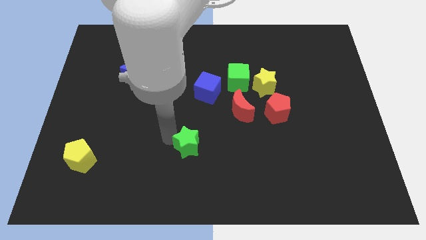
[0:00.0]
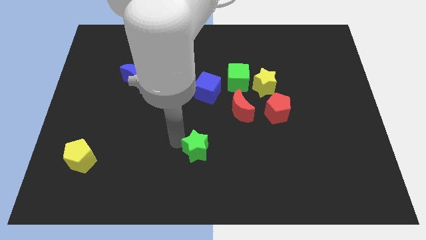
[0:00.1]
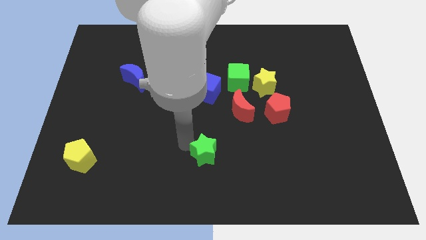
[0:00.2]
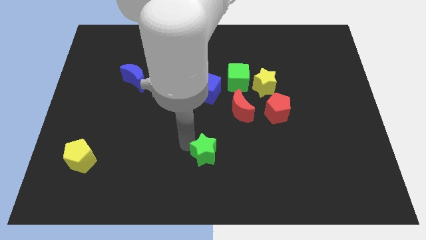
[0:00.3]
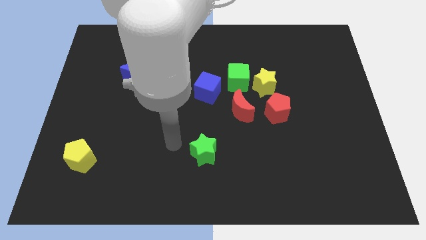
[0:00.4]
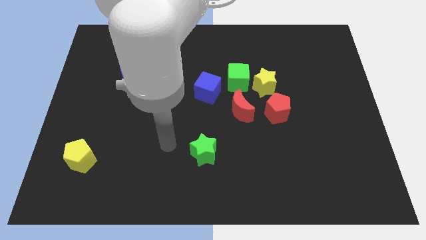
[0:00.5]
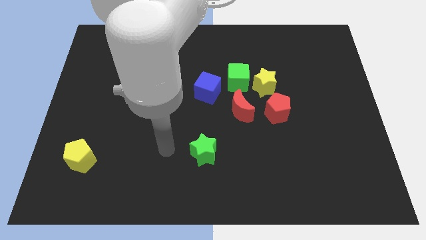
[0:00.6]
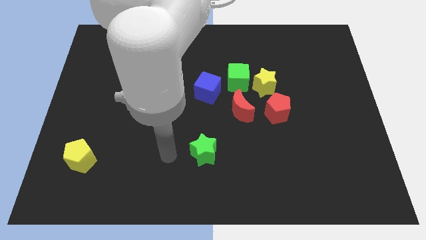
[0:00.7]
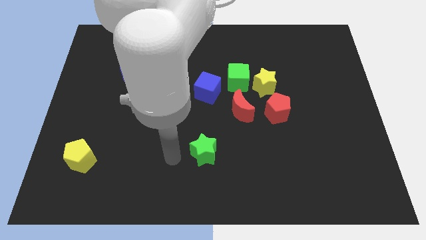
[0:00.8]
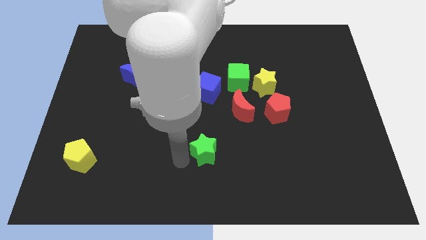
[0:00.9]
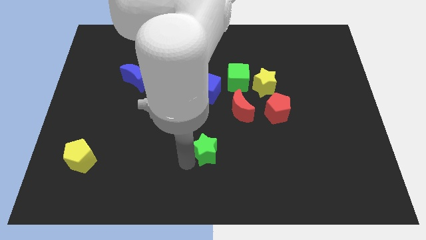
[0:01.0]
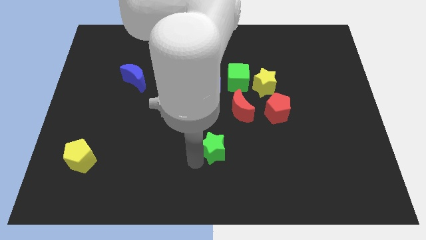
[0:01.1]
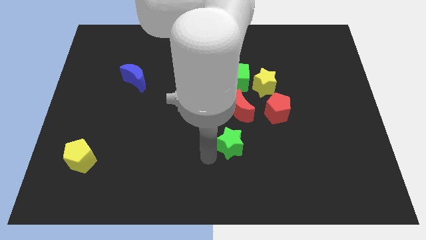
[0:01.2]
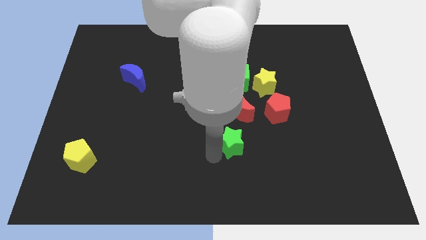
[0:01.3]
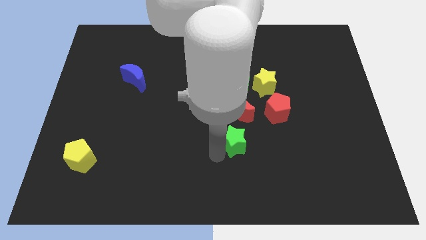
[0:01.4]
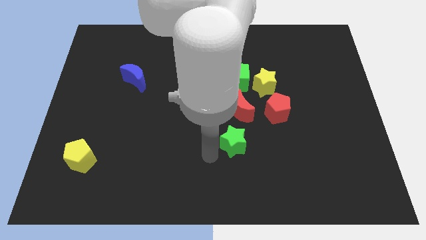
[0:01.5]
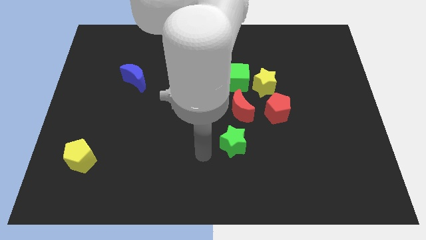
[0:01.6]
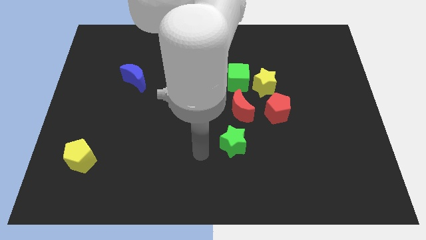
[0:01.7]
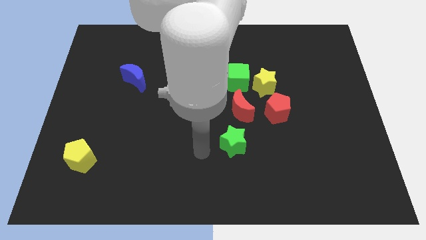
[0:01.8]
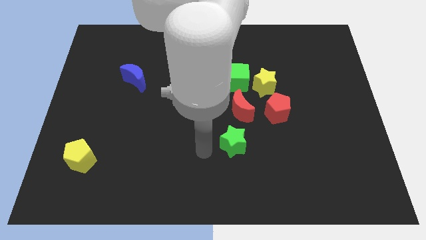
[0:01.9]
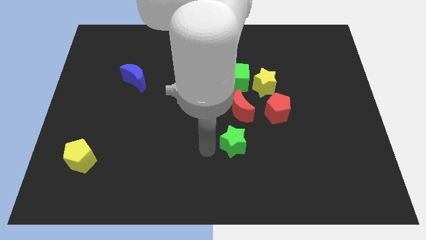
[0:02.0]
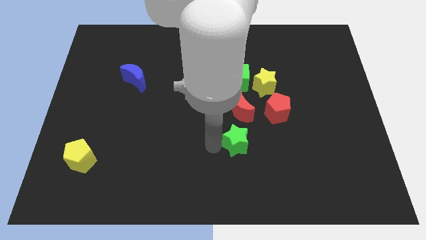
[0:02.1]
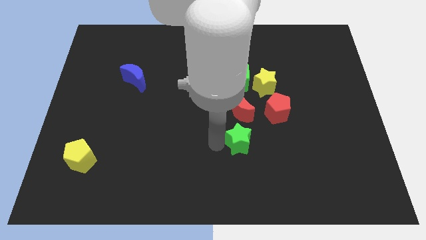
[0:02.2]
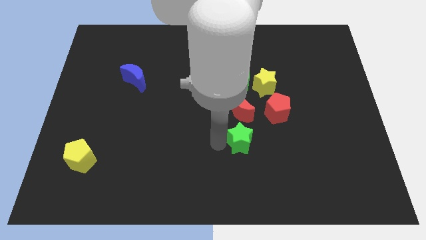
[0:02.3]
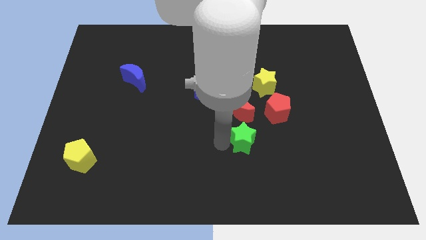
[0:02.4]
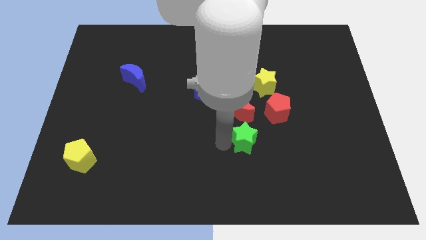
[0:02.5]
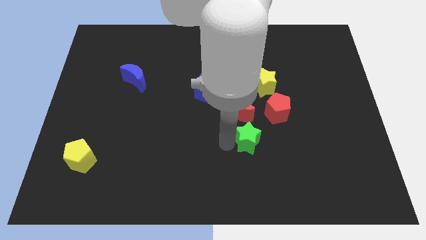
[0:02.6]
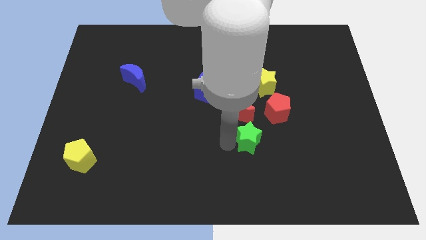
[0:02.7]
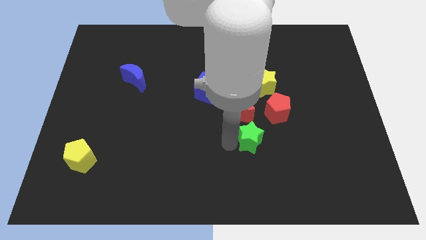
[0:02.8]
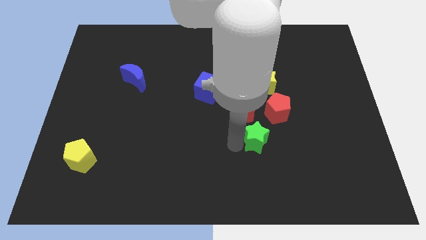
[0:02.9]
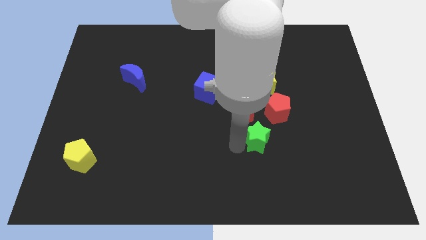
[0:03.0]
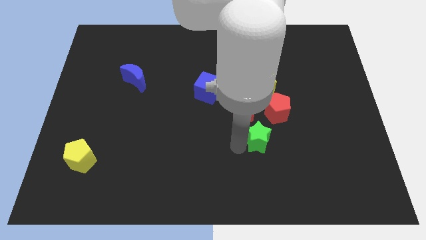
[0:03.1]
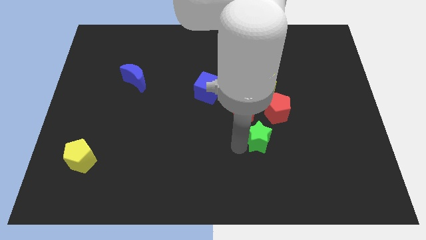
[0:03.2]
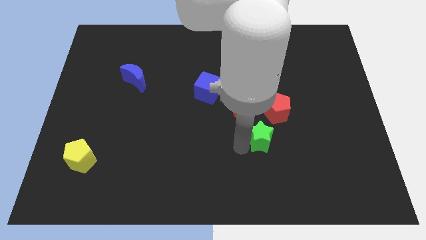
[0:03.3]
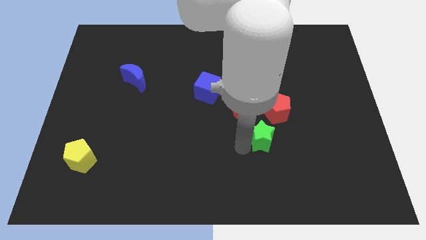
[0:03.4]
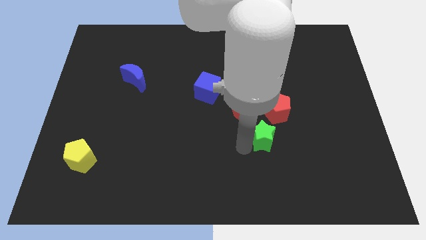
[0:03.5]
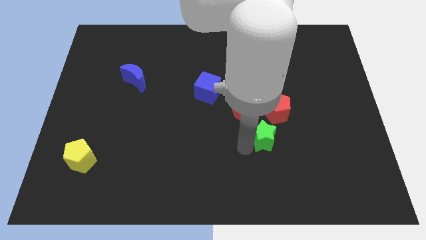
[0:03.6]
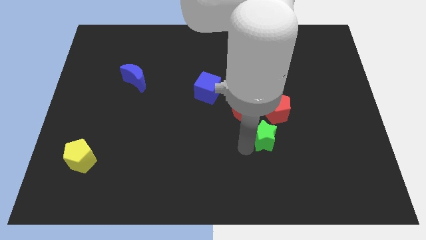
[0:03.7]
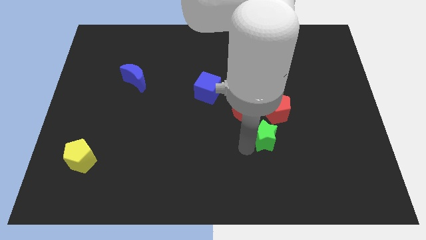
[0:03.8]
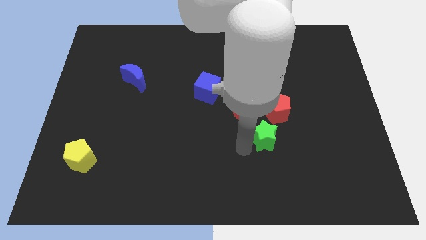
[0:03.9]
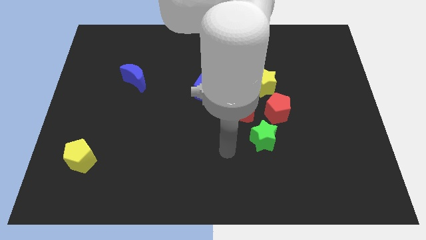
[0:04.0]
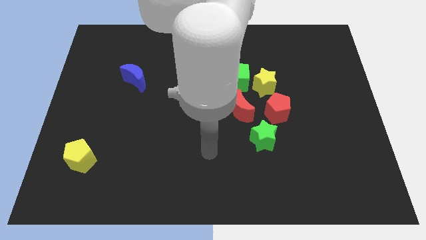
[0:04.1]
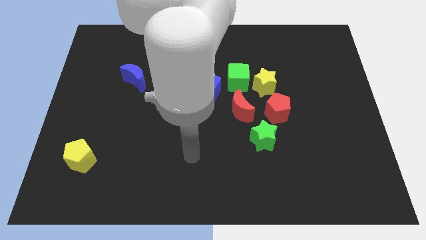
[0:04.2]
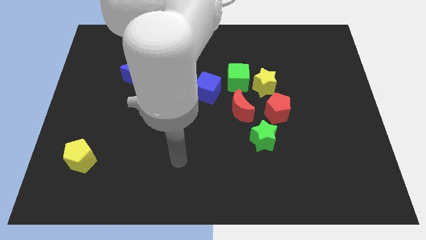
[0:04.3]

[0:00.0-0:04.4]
move the green star towards the red pentagon

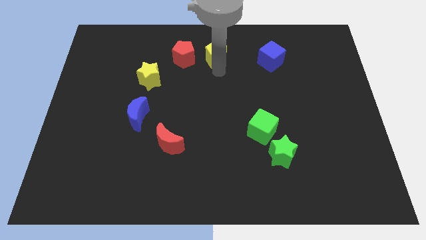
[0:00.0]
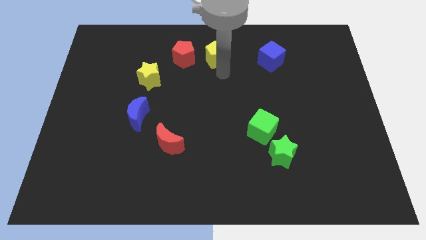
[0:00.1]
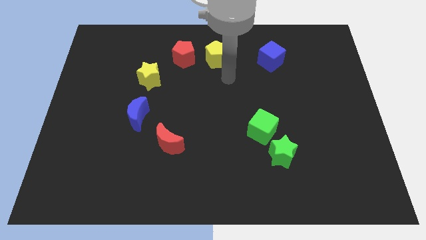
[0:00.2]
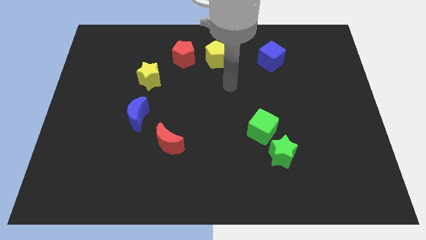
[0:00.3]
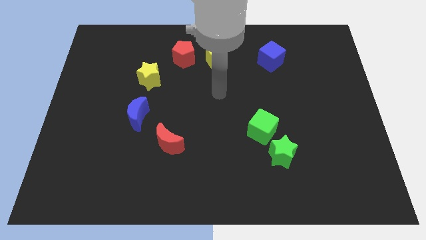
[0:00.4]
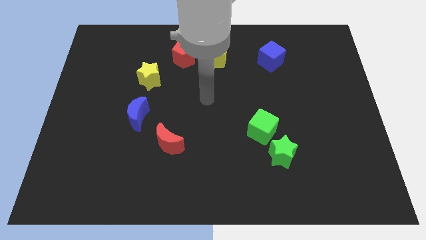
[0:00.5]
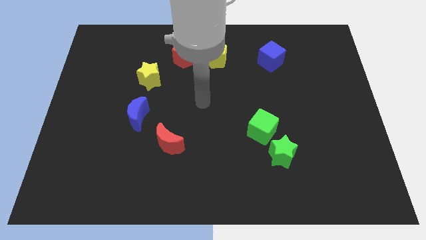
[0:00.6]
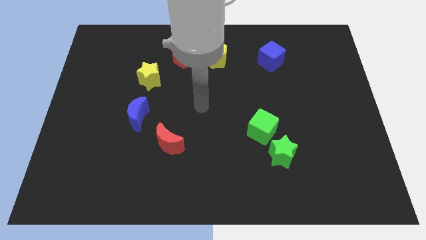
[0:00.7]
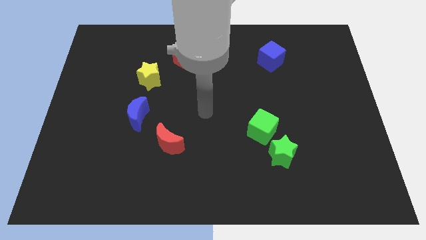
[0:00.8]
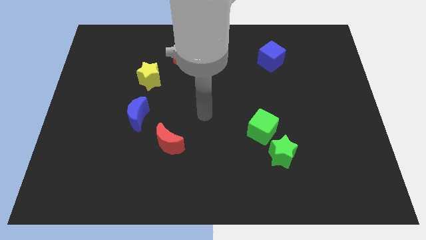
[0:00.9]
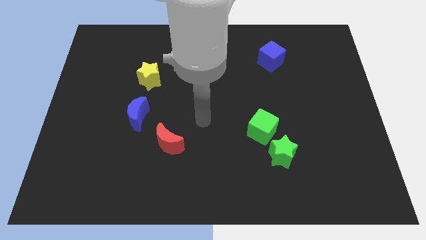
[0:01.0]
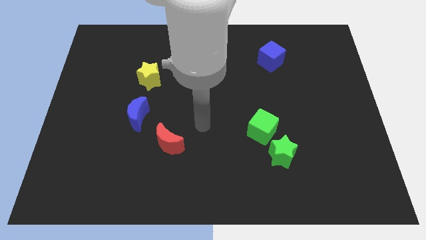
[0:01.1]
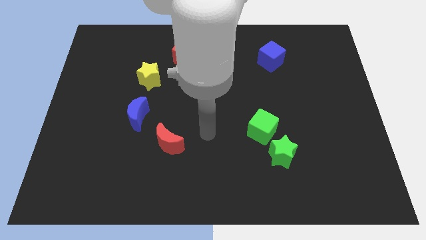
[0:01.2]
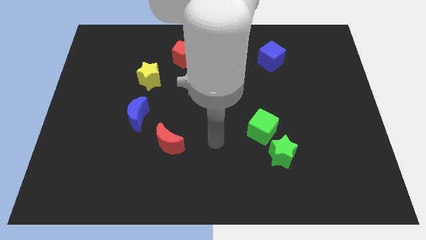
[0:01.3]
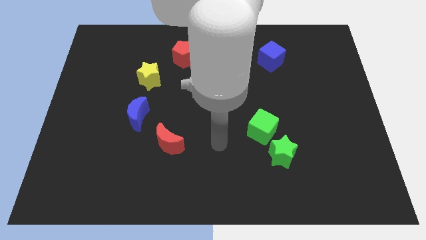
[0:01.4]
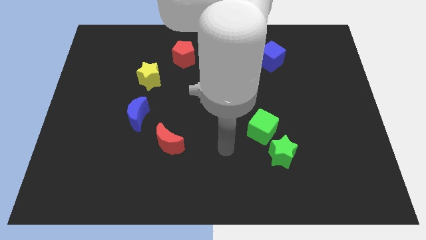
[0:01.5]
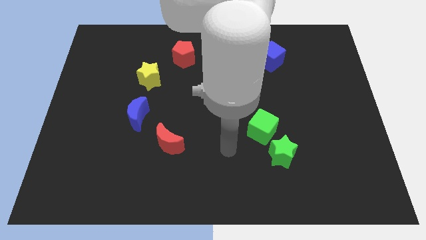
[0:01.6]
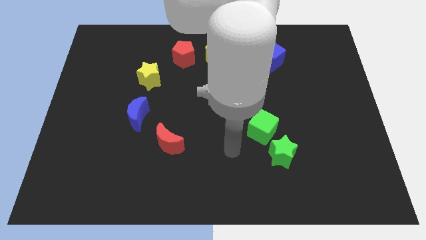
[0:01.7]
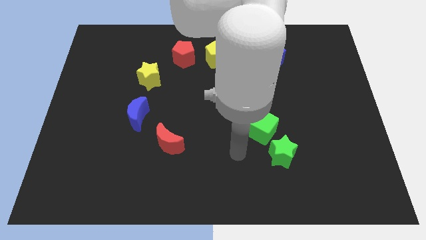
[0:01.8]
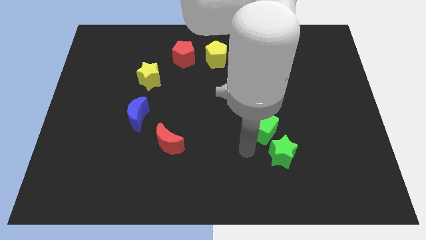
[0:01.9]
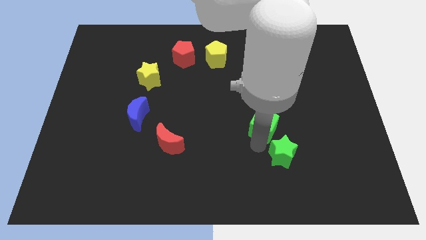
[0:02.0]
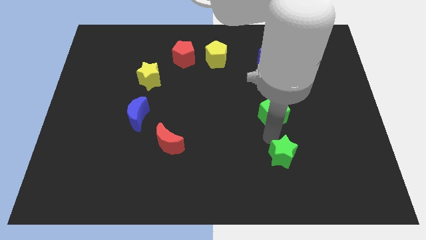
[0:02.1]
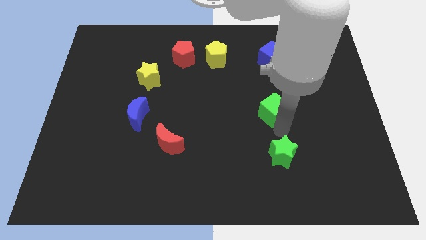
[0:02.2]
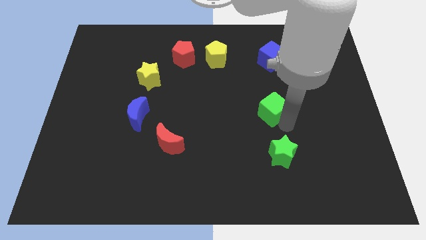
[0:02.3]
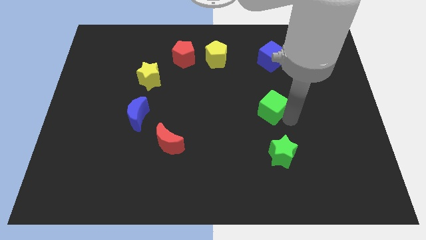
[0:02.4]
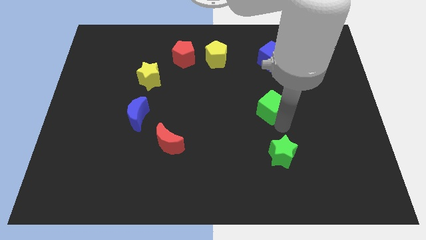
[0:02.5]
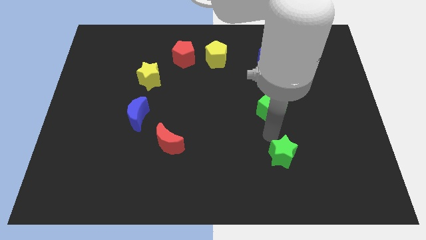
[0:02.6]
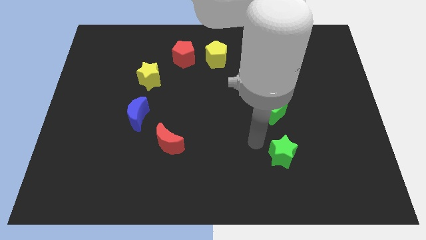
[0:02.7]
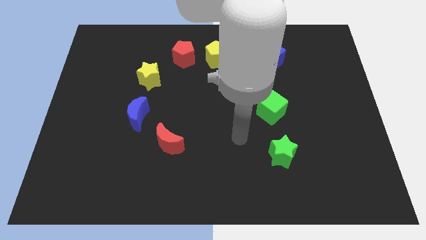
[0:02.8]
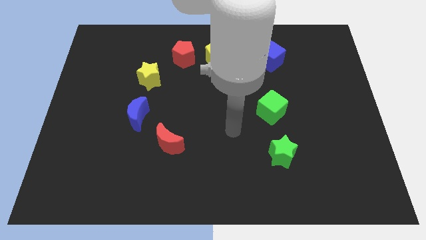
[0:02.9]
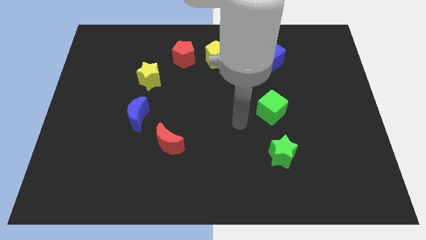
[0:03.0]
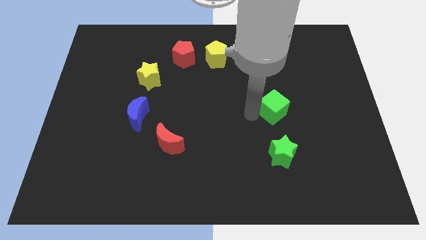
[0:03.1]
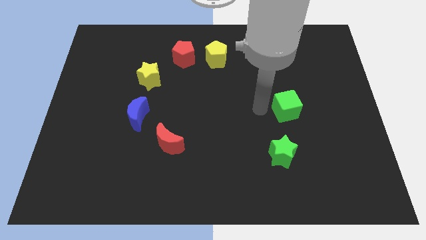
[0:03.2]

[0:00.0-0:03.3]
put the green cube at the top of green star

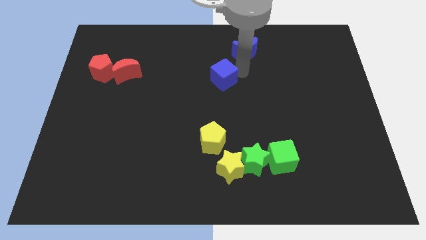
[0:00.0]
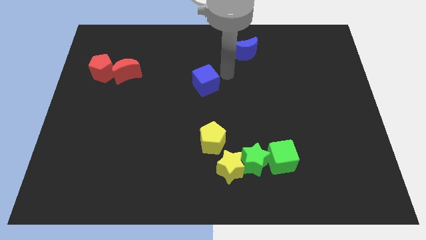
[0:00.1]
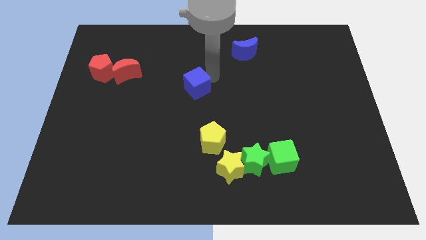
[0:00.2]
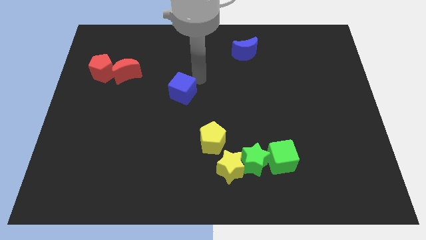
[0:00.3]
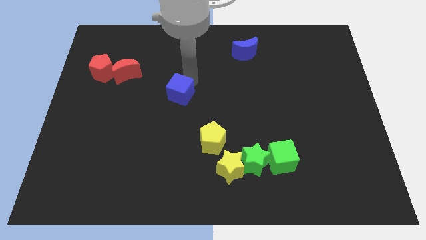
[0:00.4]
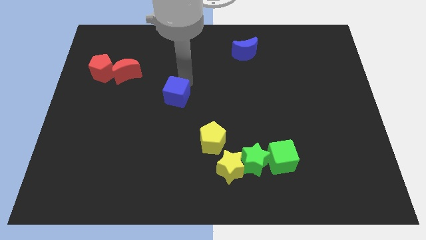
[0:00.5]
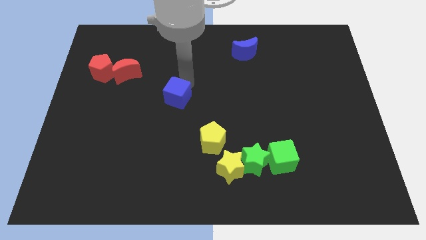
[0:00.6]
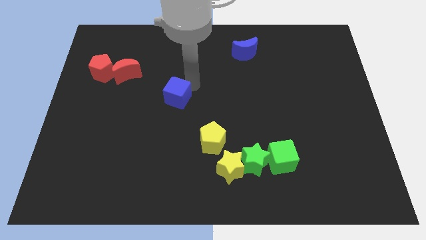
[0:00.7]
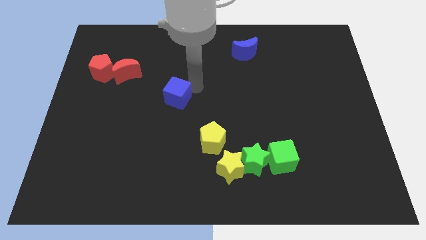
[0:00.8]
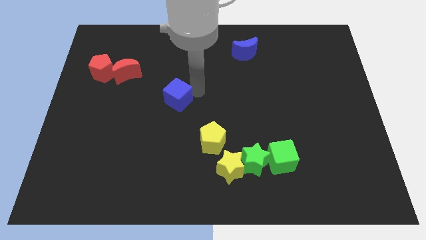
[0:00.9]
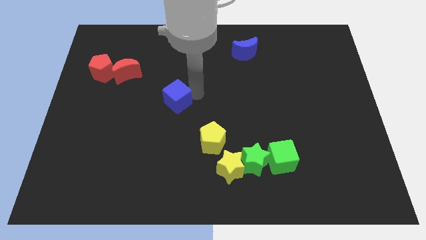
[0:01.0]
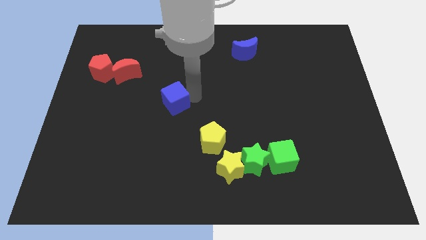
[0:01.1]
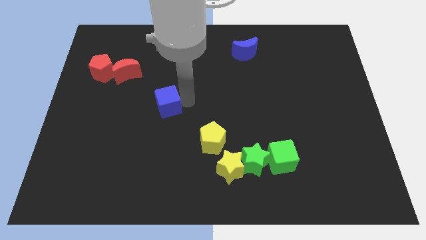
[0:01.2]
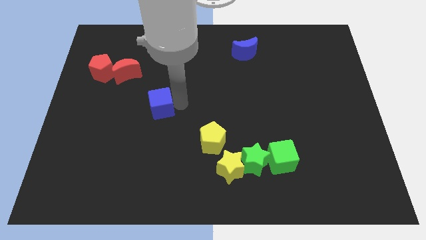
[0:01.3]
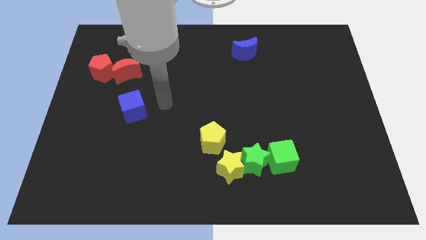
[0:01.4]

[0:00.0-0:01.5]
push blue cube below red crescent
